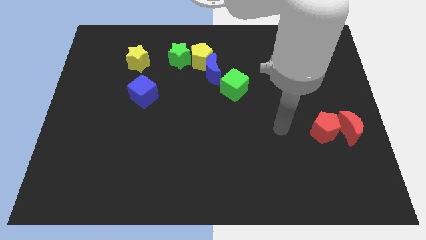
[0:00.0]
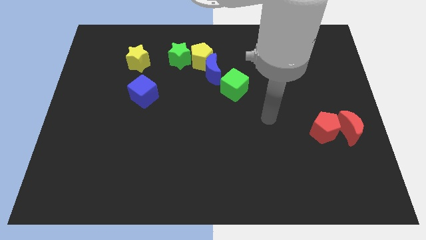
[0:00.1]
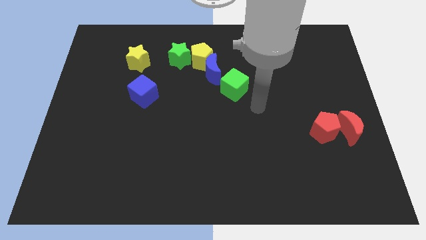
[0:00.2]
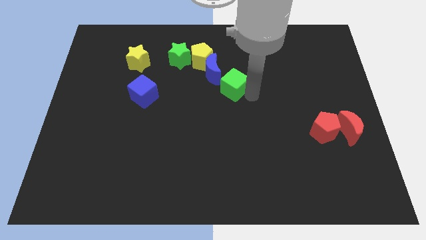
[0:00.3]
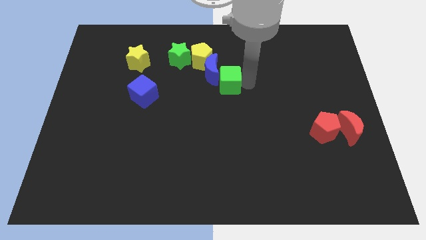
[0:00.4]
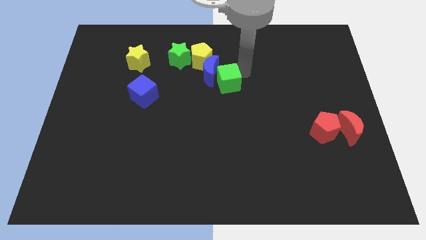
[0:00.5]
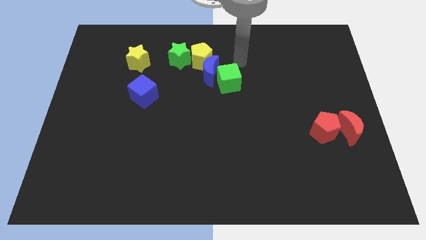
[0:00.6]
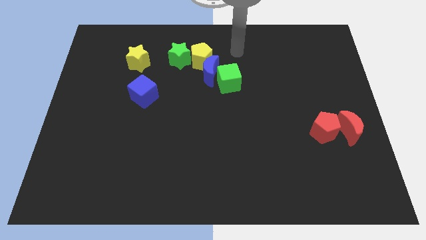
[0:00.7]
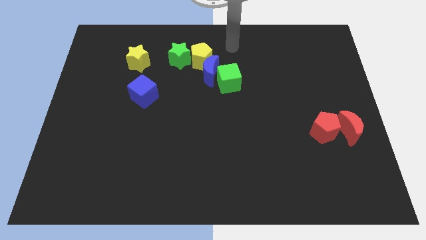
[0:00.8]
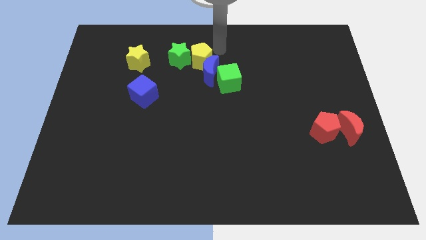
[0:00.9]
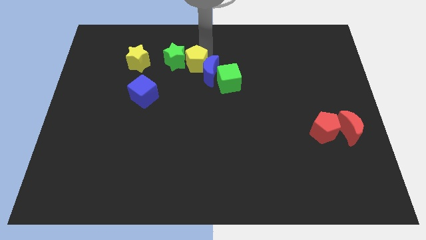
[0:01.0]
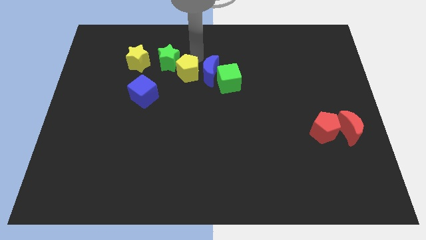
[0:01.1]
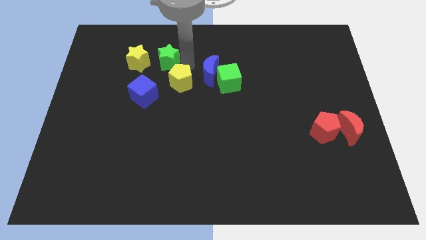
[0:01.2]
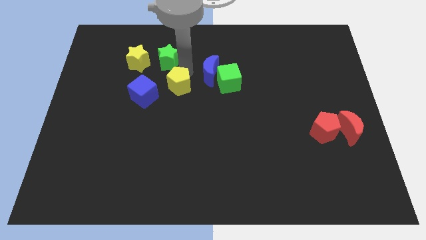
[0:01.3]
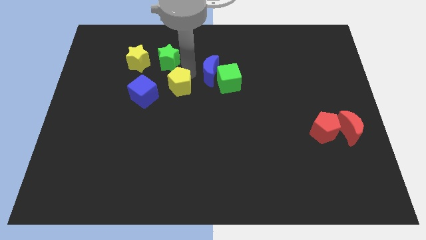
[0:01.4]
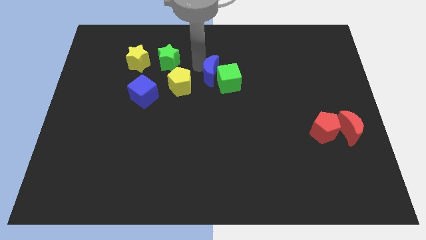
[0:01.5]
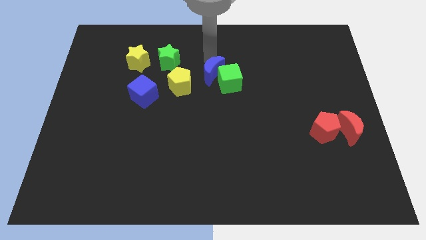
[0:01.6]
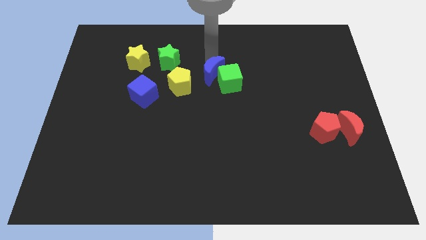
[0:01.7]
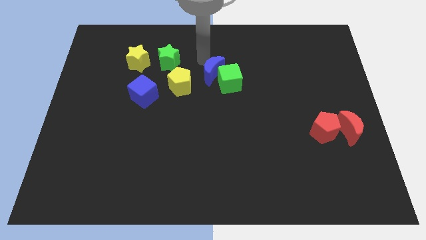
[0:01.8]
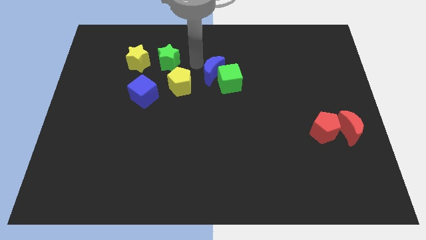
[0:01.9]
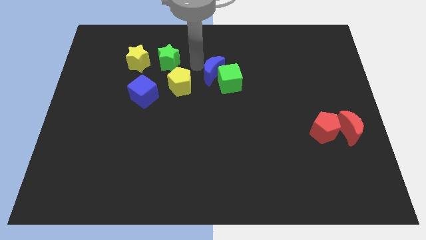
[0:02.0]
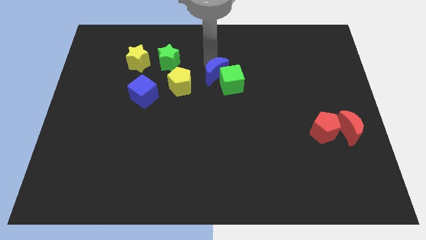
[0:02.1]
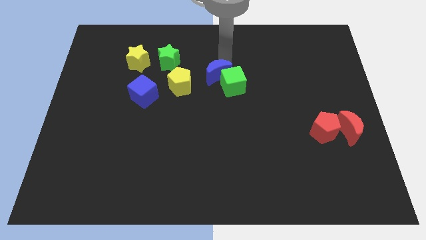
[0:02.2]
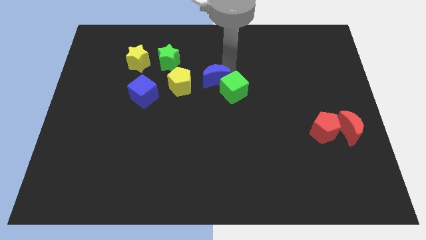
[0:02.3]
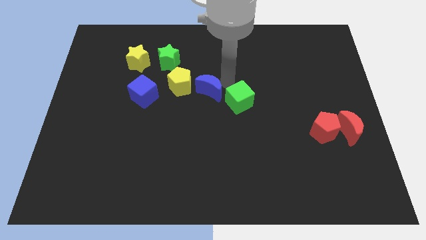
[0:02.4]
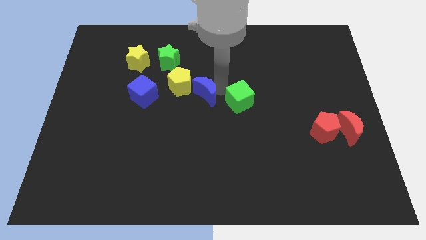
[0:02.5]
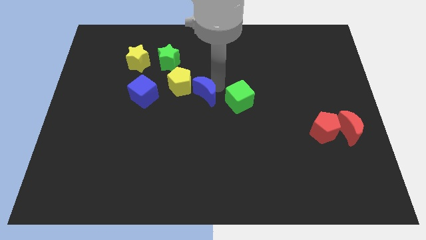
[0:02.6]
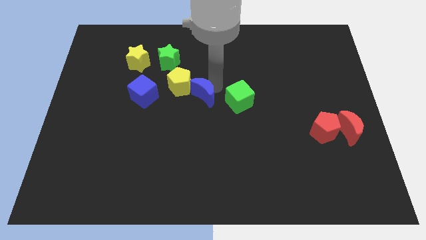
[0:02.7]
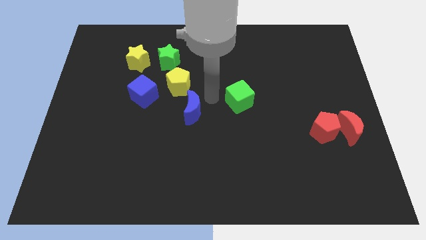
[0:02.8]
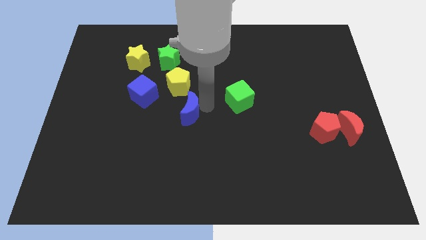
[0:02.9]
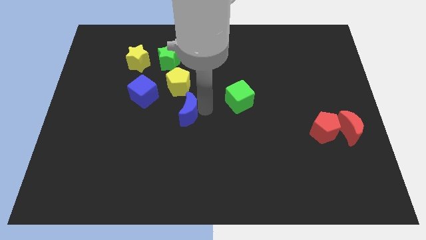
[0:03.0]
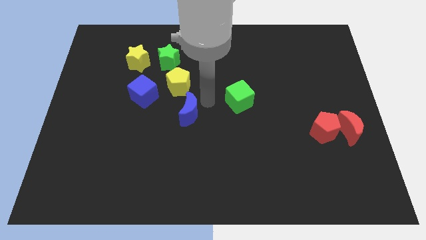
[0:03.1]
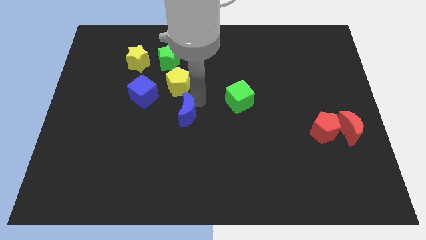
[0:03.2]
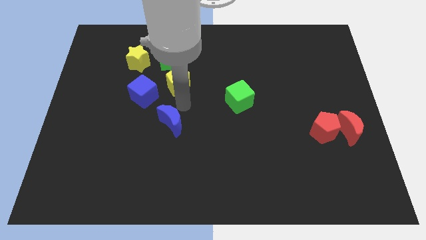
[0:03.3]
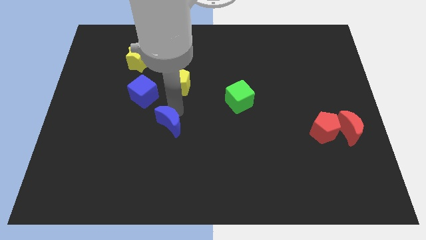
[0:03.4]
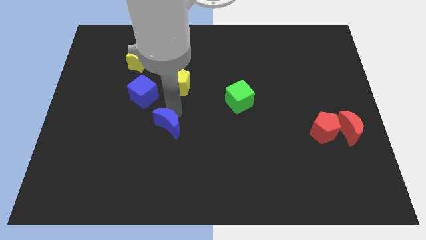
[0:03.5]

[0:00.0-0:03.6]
move blue crescent to the bottom of the yellow pentagon

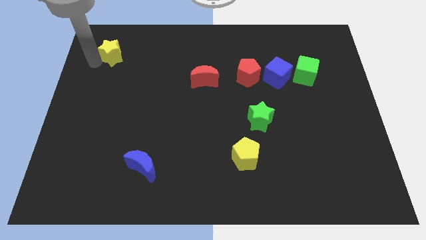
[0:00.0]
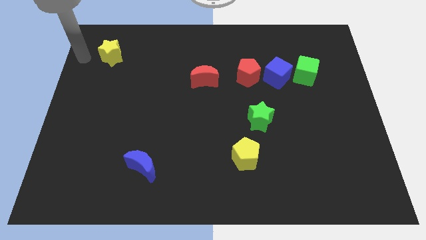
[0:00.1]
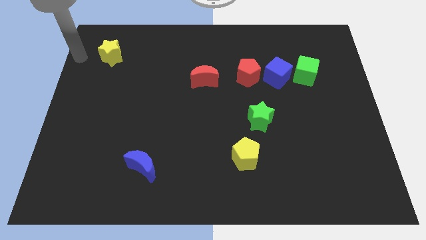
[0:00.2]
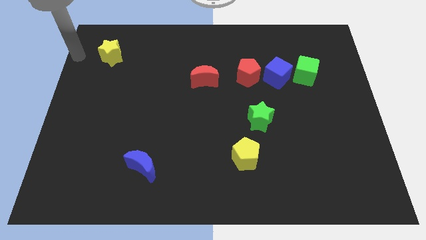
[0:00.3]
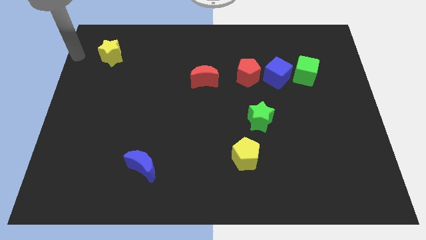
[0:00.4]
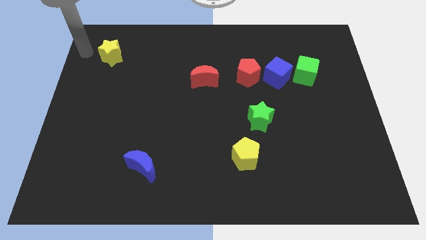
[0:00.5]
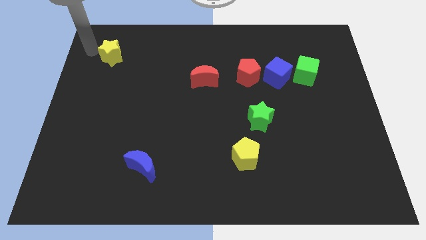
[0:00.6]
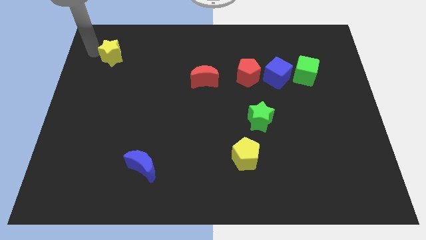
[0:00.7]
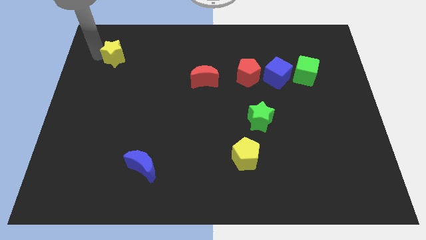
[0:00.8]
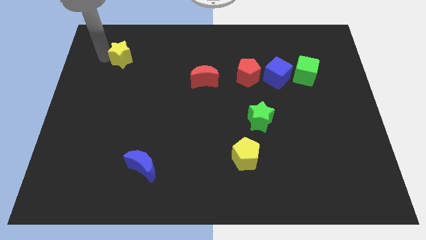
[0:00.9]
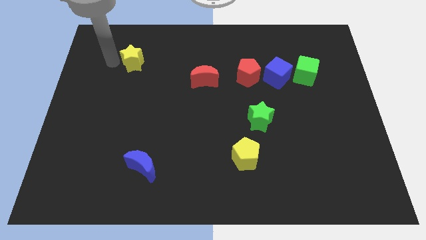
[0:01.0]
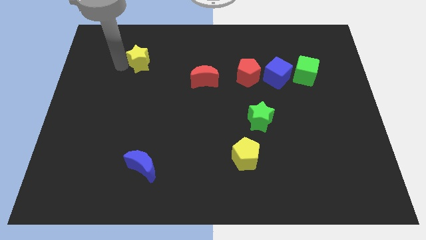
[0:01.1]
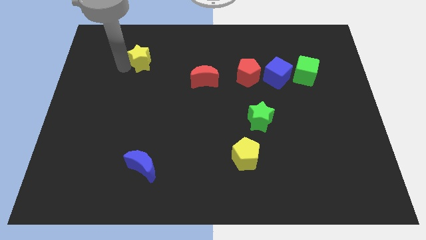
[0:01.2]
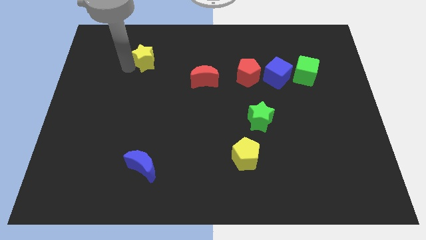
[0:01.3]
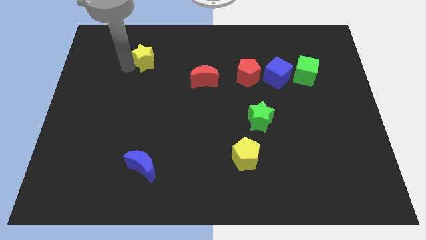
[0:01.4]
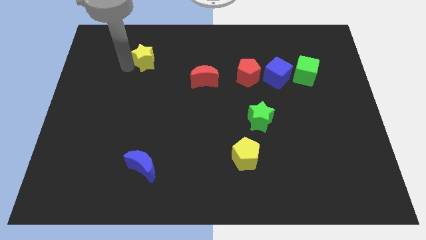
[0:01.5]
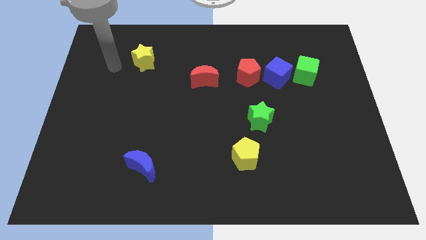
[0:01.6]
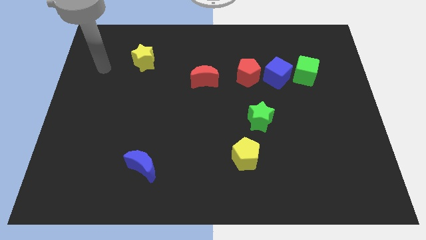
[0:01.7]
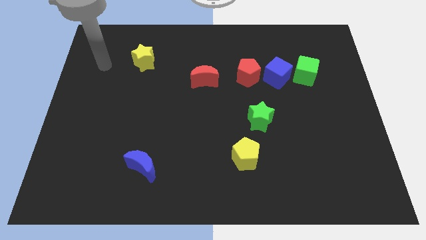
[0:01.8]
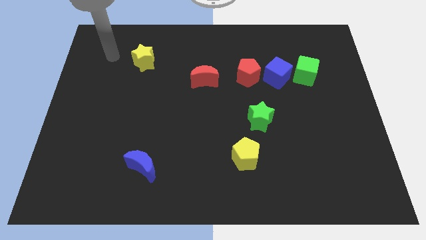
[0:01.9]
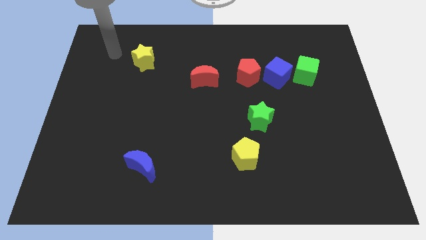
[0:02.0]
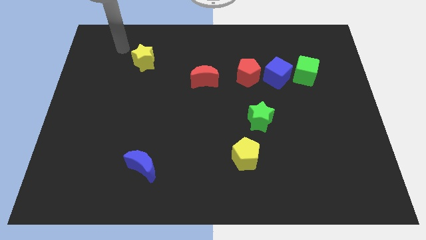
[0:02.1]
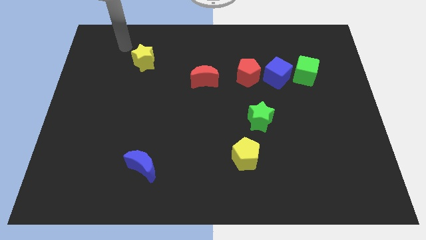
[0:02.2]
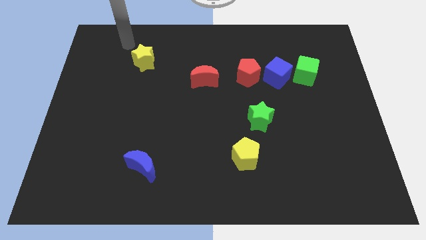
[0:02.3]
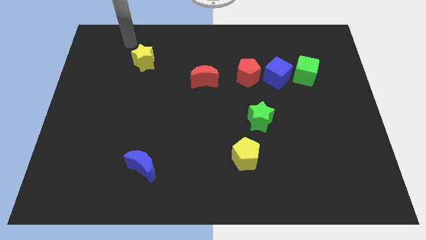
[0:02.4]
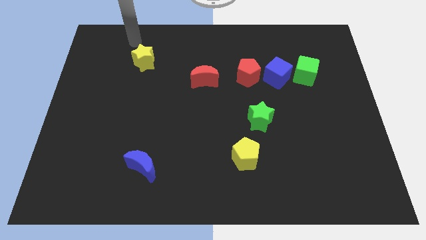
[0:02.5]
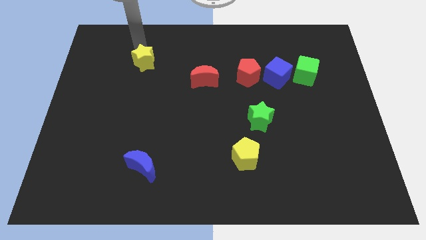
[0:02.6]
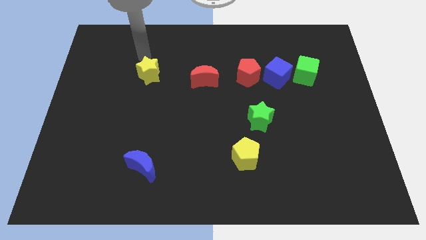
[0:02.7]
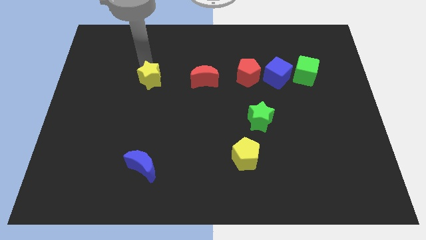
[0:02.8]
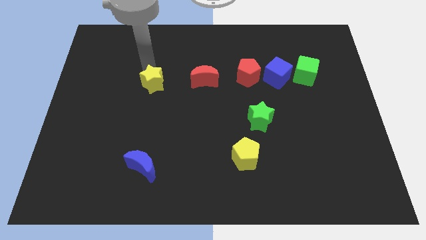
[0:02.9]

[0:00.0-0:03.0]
place the yellow star parallel left to the red crescent

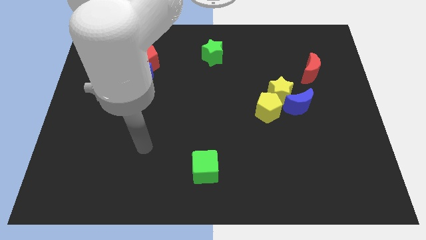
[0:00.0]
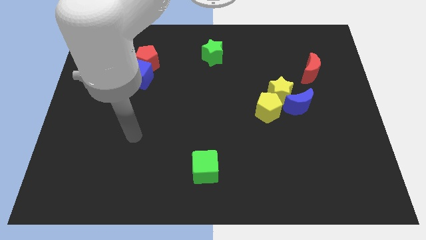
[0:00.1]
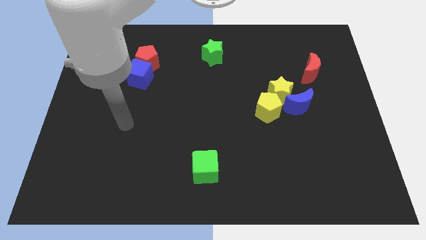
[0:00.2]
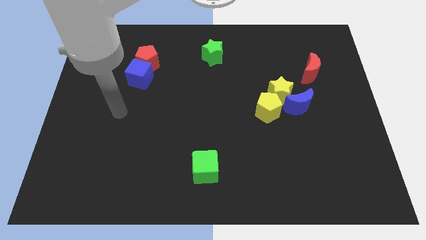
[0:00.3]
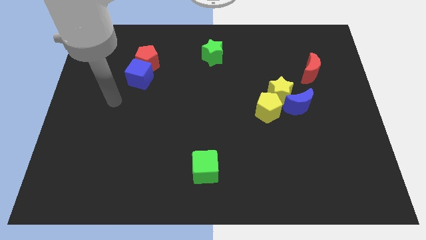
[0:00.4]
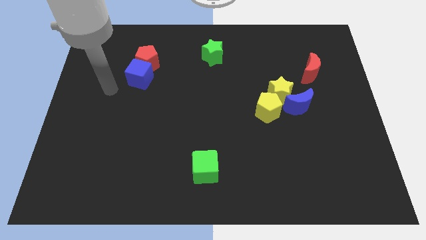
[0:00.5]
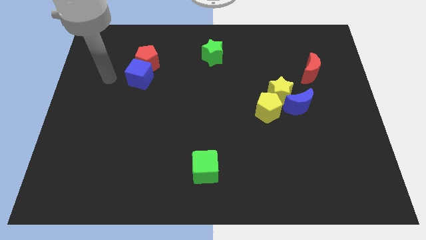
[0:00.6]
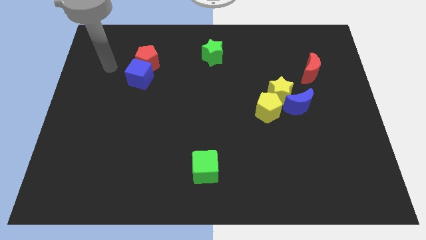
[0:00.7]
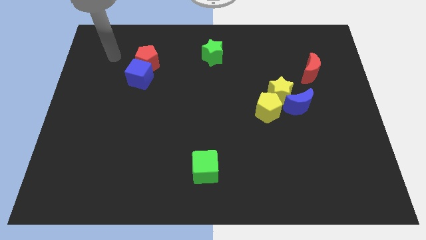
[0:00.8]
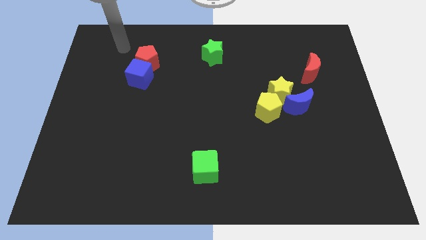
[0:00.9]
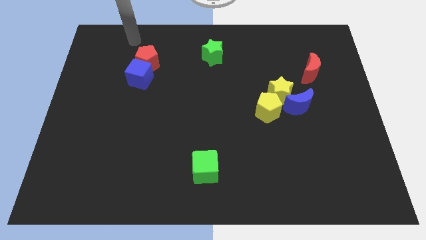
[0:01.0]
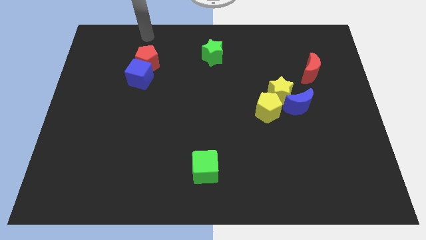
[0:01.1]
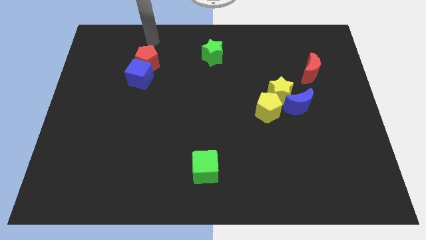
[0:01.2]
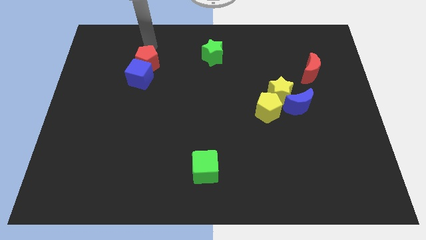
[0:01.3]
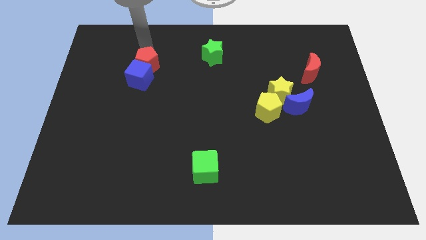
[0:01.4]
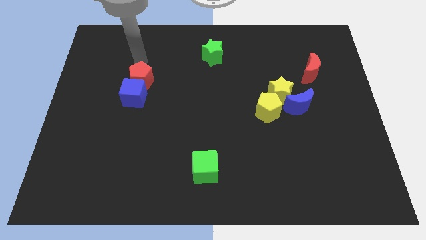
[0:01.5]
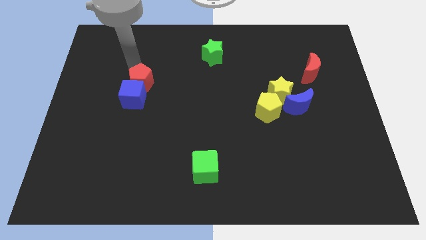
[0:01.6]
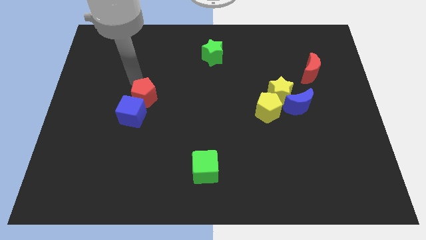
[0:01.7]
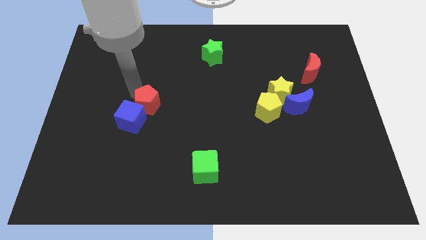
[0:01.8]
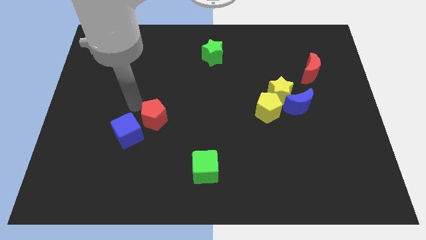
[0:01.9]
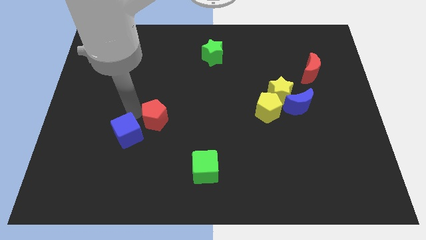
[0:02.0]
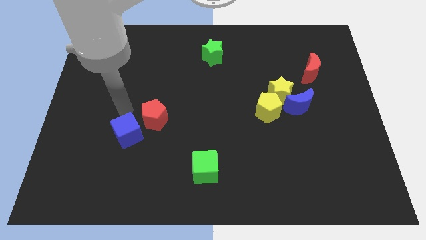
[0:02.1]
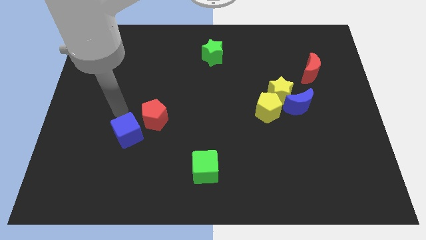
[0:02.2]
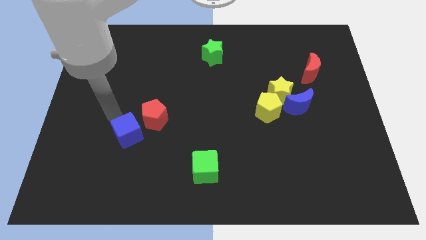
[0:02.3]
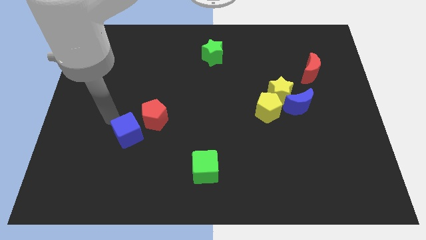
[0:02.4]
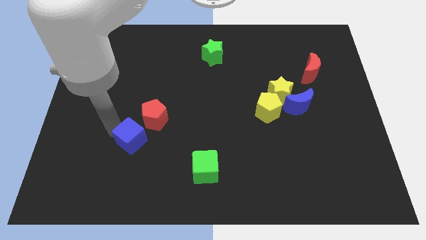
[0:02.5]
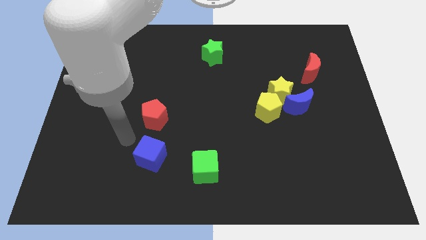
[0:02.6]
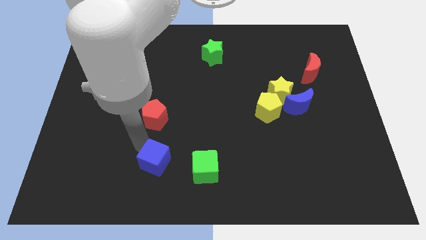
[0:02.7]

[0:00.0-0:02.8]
move red pentagon and blue cube towards green cube
